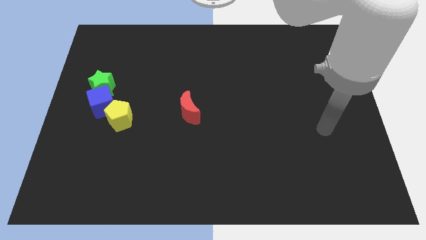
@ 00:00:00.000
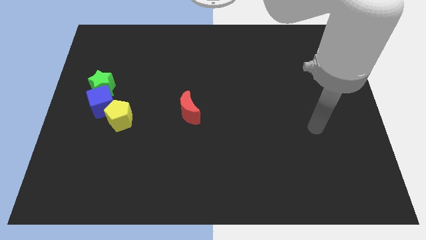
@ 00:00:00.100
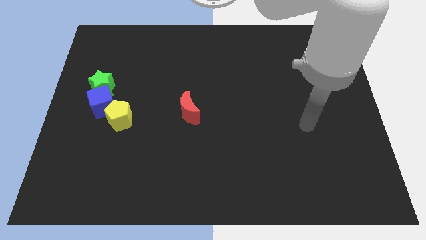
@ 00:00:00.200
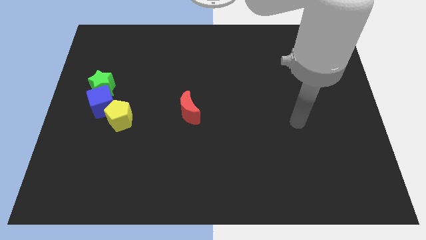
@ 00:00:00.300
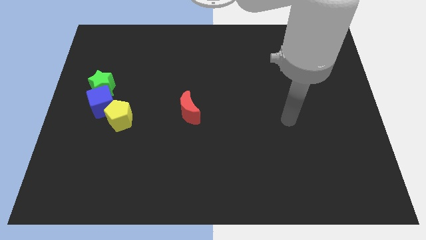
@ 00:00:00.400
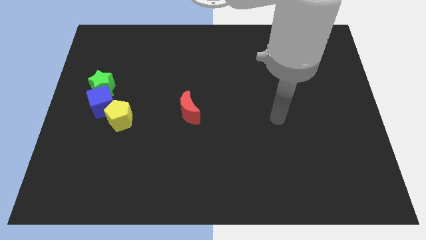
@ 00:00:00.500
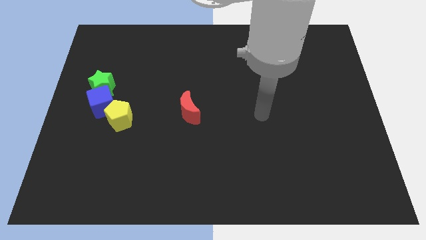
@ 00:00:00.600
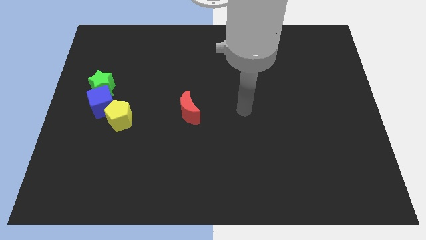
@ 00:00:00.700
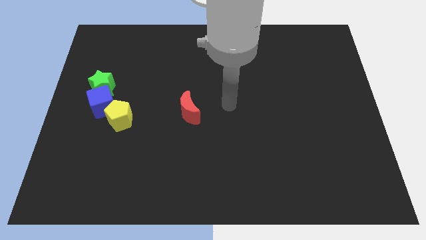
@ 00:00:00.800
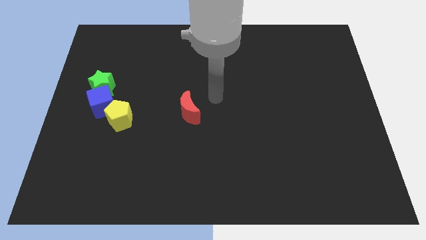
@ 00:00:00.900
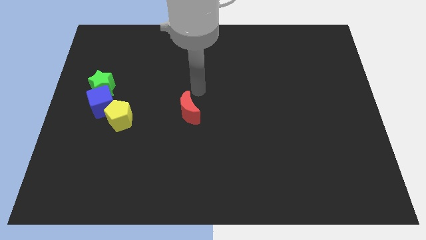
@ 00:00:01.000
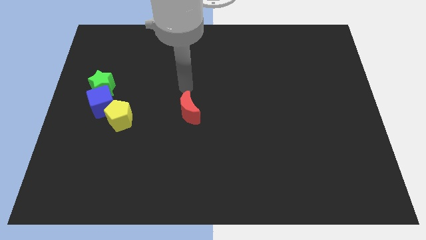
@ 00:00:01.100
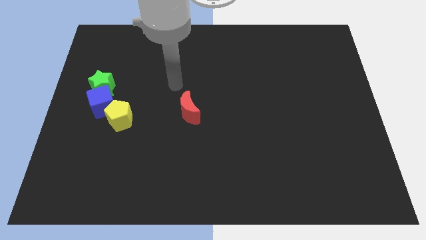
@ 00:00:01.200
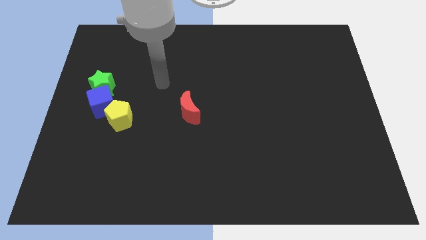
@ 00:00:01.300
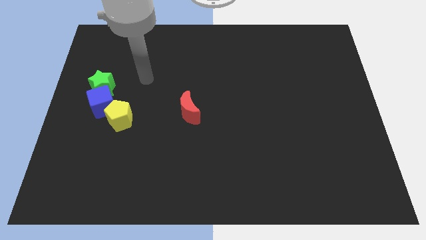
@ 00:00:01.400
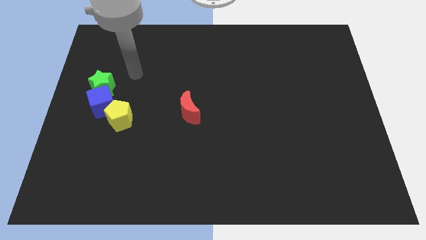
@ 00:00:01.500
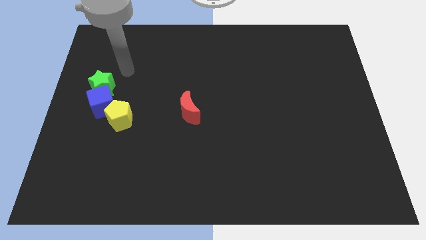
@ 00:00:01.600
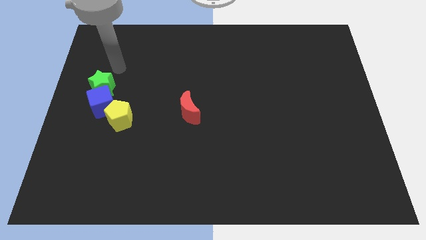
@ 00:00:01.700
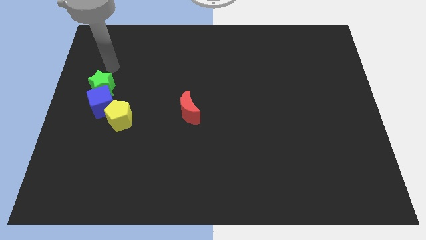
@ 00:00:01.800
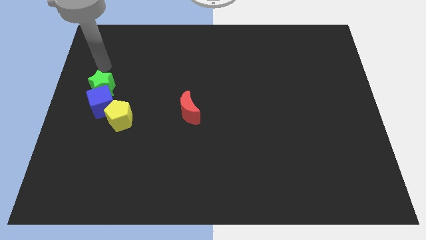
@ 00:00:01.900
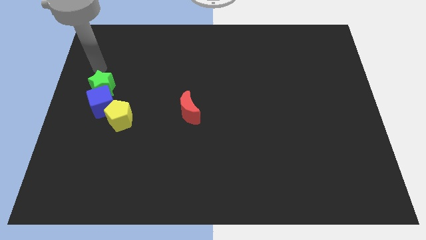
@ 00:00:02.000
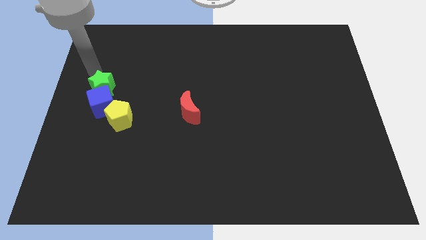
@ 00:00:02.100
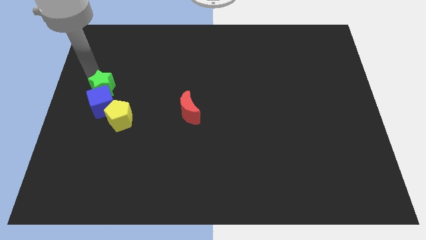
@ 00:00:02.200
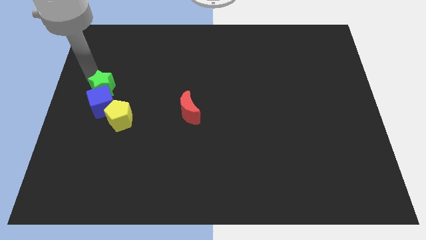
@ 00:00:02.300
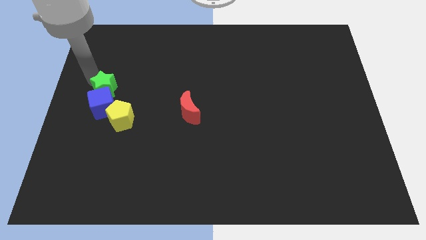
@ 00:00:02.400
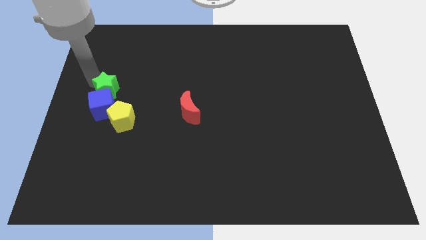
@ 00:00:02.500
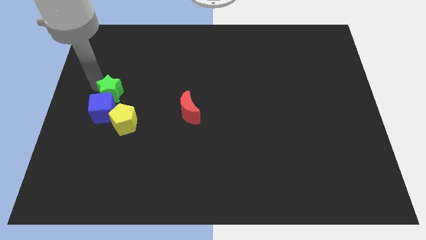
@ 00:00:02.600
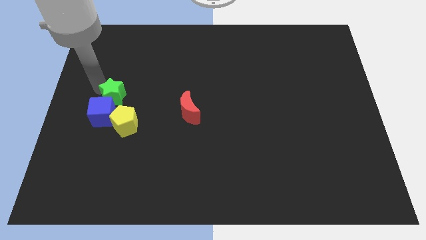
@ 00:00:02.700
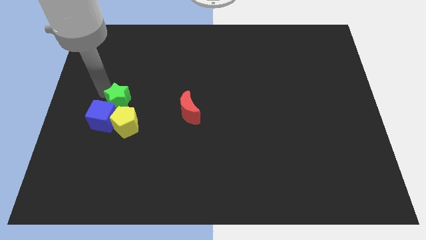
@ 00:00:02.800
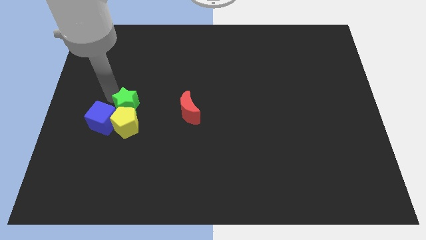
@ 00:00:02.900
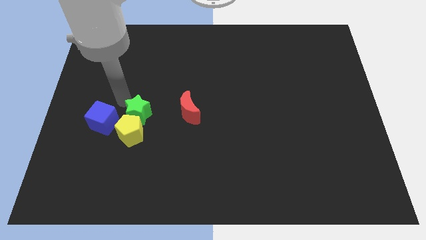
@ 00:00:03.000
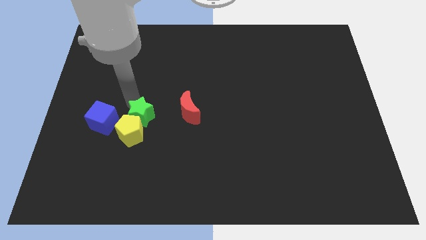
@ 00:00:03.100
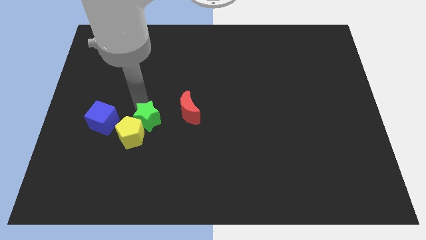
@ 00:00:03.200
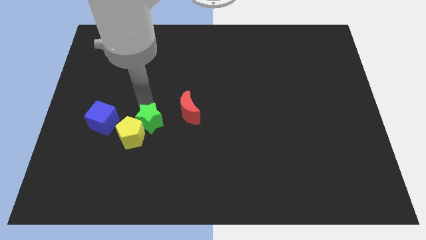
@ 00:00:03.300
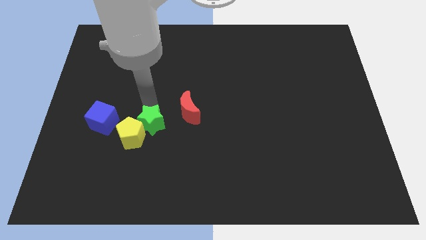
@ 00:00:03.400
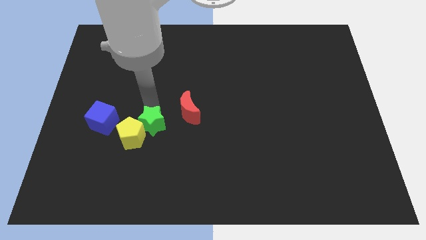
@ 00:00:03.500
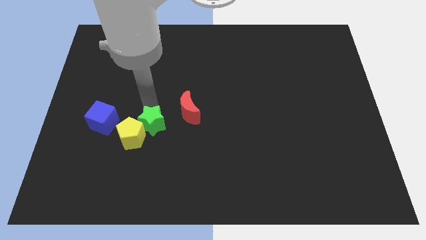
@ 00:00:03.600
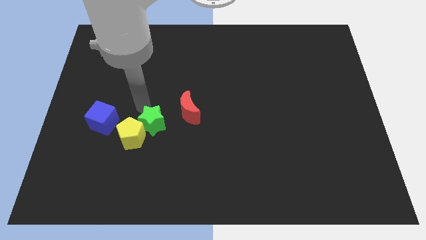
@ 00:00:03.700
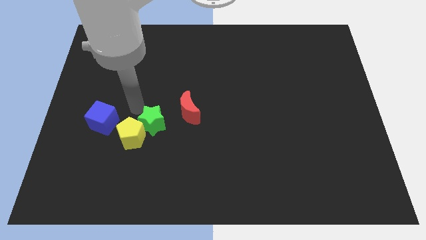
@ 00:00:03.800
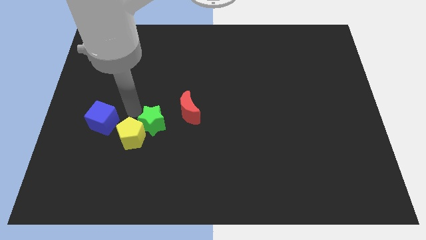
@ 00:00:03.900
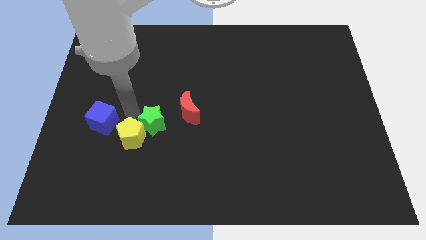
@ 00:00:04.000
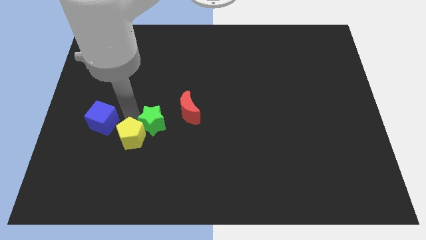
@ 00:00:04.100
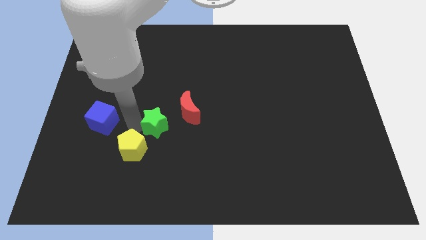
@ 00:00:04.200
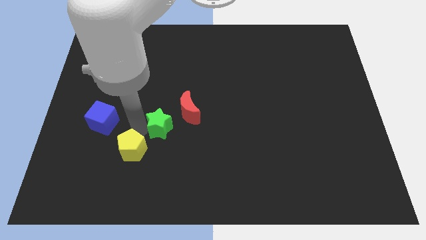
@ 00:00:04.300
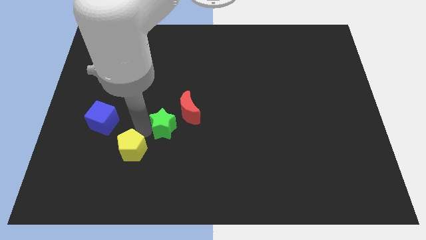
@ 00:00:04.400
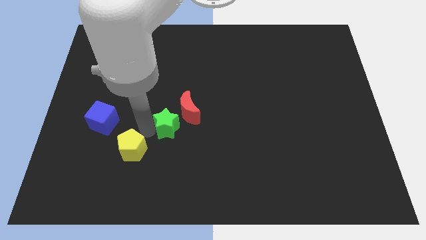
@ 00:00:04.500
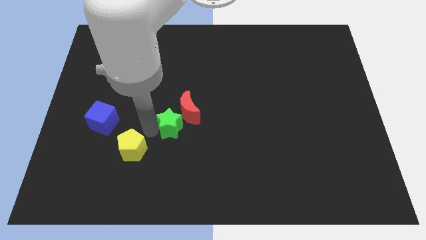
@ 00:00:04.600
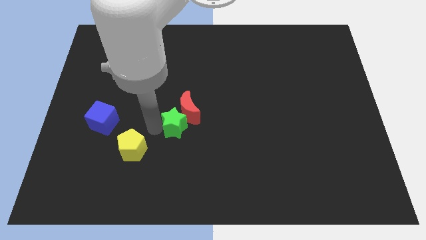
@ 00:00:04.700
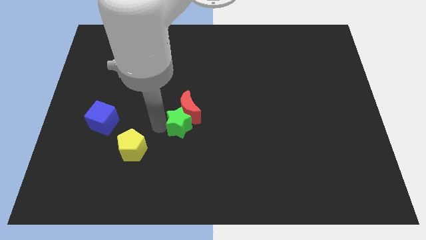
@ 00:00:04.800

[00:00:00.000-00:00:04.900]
slide the green star towards the red moon

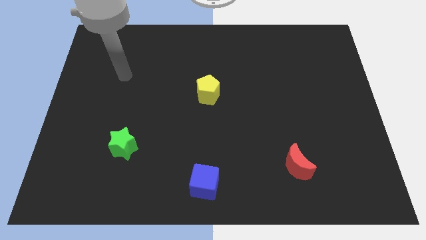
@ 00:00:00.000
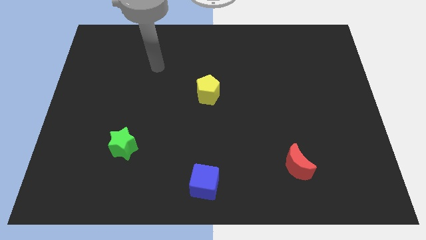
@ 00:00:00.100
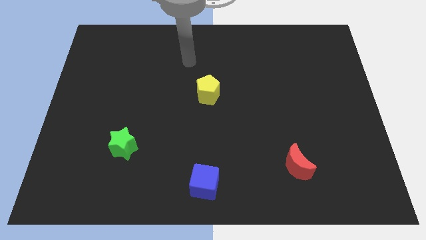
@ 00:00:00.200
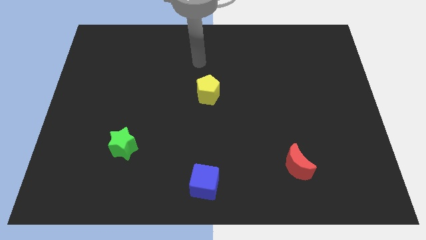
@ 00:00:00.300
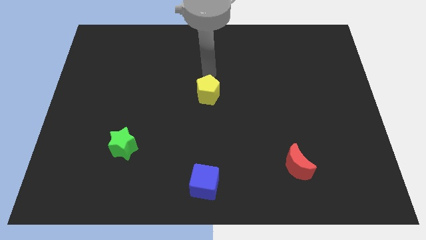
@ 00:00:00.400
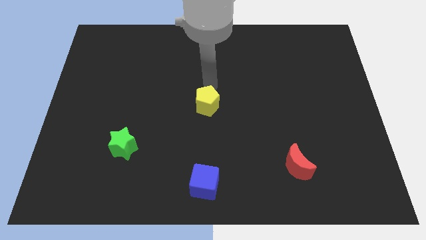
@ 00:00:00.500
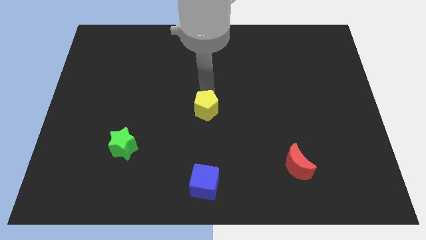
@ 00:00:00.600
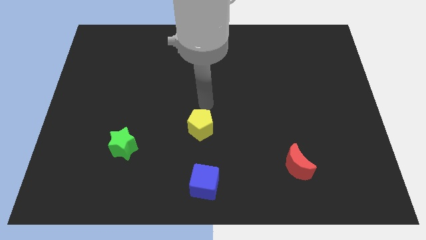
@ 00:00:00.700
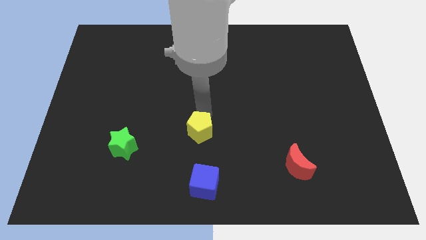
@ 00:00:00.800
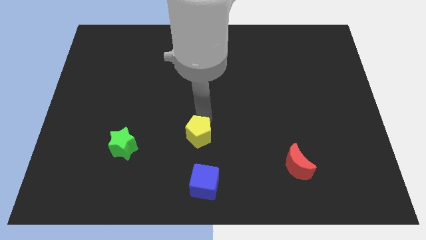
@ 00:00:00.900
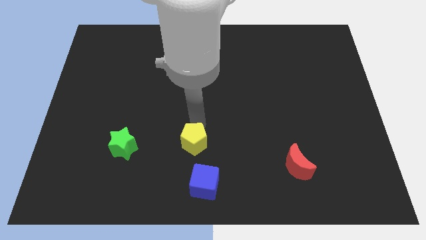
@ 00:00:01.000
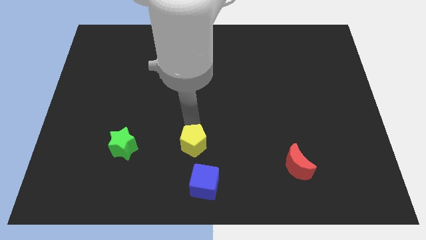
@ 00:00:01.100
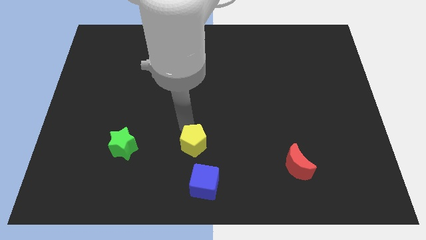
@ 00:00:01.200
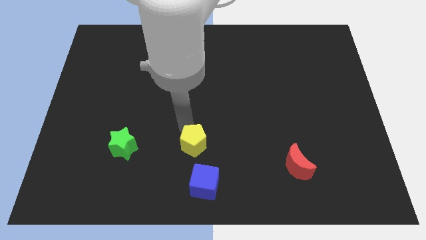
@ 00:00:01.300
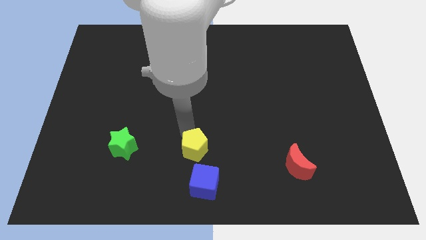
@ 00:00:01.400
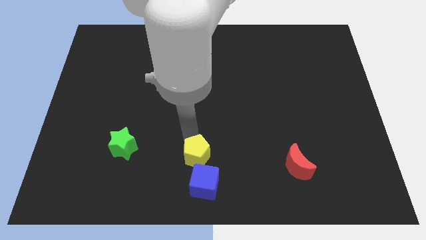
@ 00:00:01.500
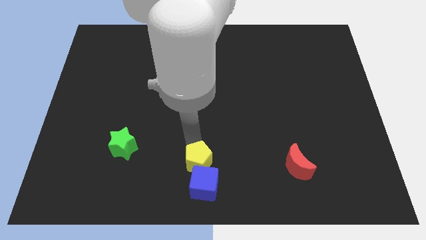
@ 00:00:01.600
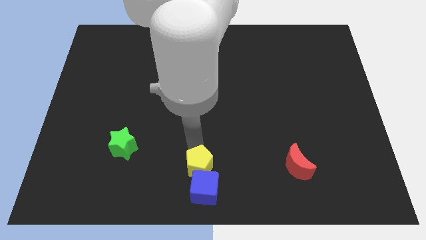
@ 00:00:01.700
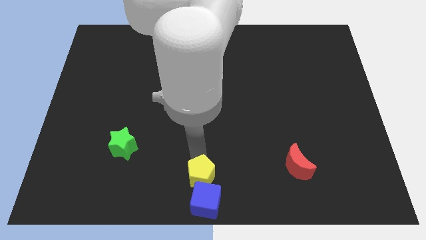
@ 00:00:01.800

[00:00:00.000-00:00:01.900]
push the pentagon next to the blue block

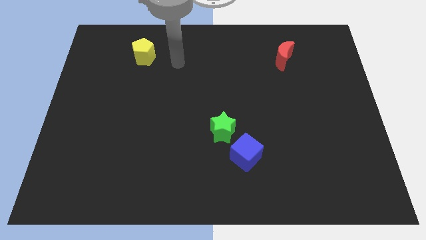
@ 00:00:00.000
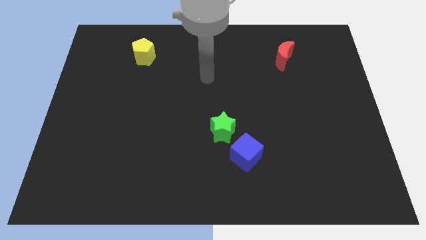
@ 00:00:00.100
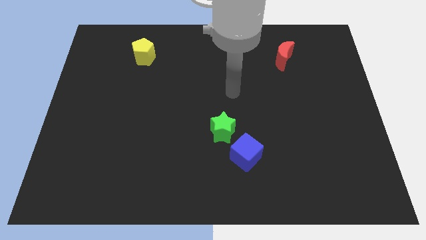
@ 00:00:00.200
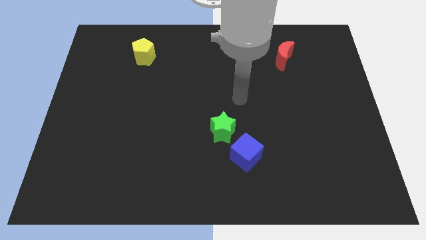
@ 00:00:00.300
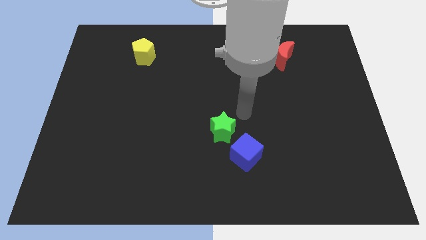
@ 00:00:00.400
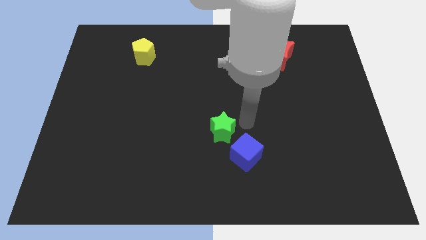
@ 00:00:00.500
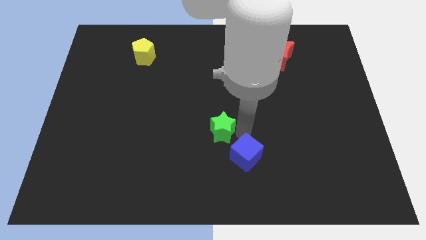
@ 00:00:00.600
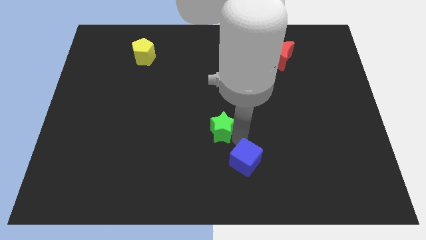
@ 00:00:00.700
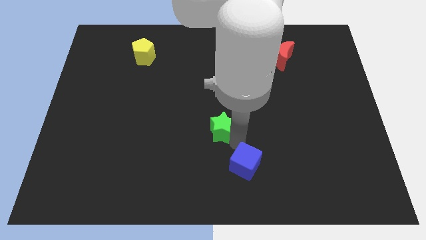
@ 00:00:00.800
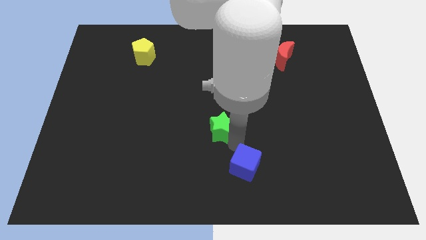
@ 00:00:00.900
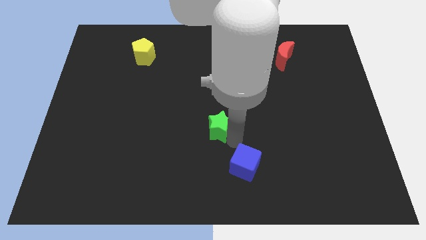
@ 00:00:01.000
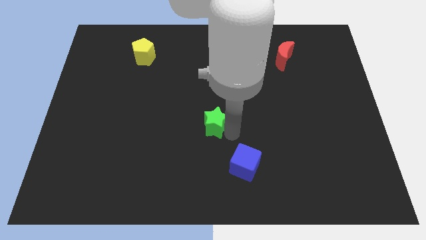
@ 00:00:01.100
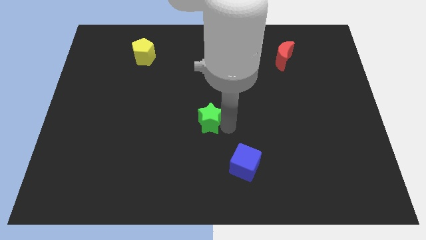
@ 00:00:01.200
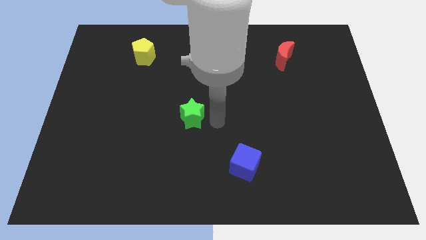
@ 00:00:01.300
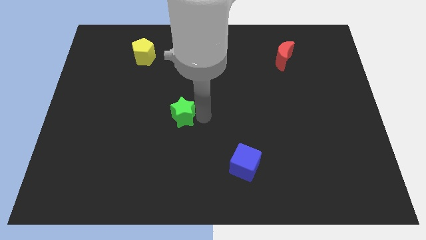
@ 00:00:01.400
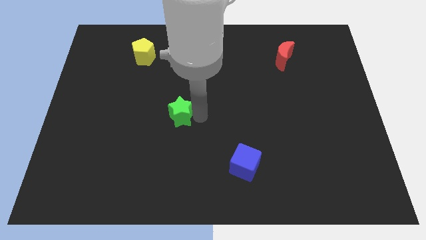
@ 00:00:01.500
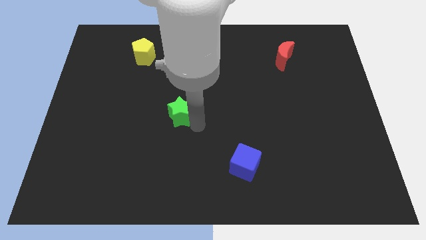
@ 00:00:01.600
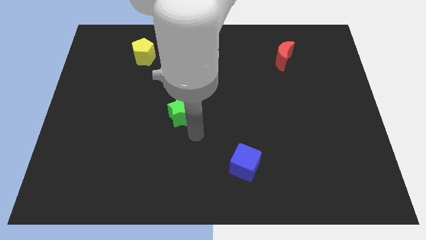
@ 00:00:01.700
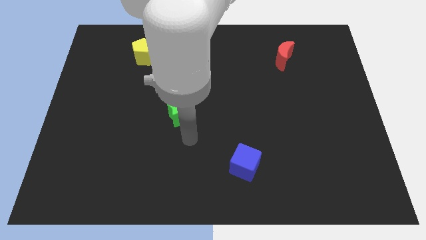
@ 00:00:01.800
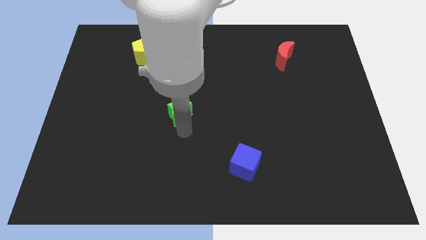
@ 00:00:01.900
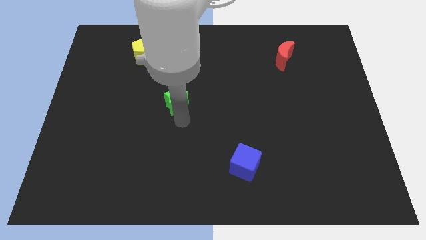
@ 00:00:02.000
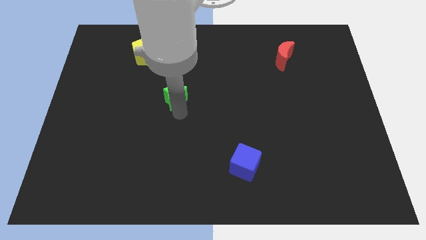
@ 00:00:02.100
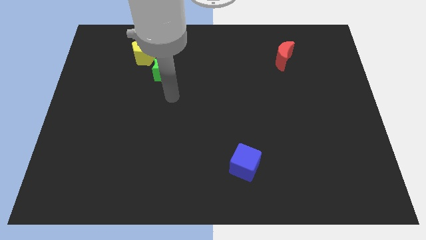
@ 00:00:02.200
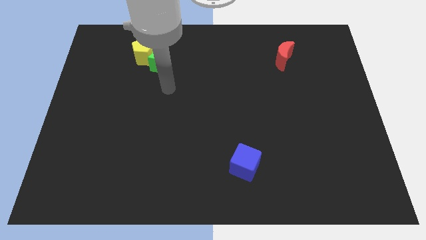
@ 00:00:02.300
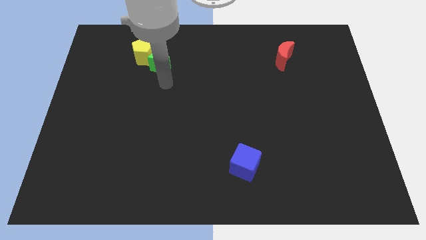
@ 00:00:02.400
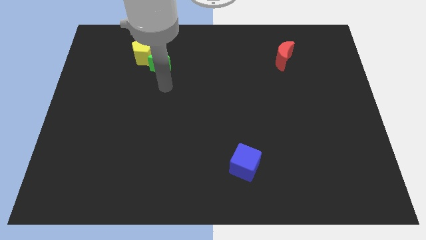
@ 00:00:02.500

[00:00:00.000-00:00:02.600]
move the green block next to the yellow block
